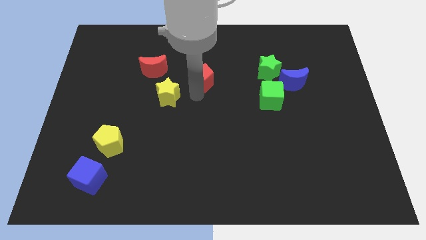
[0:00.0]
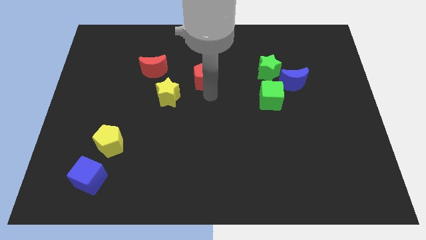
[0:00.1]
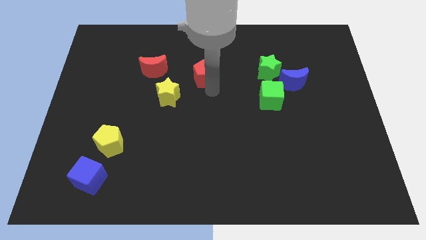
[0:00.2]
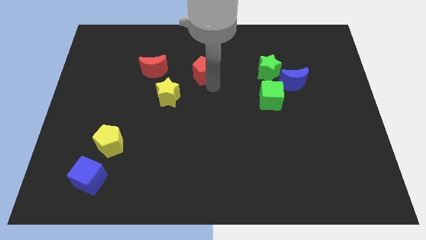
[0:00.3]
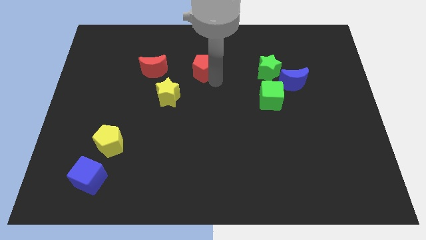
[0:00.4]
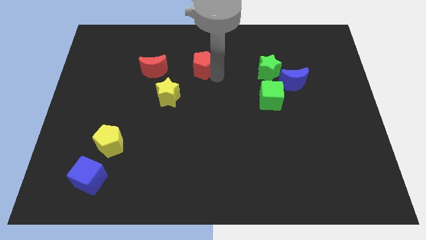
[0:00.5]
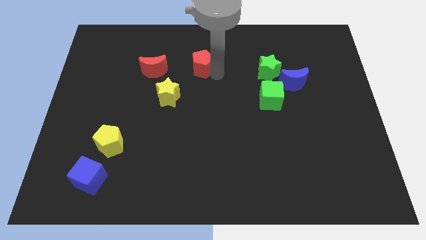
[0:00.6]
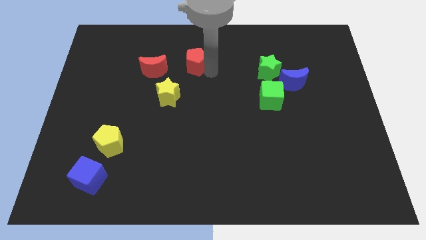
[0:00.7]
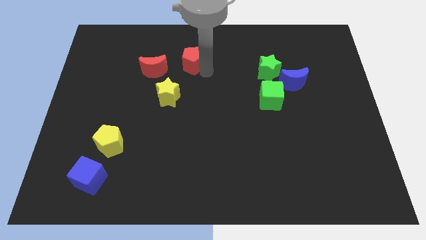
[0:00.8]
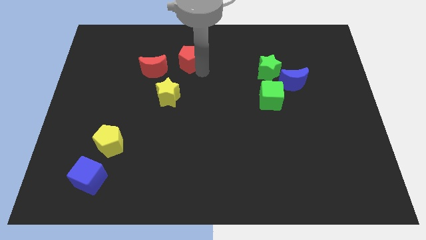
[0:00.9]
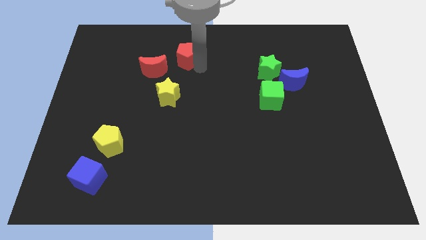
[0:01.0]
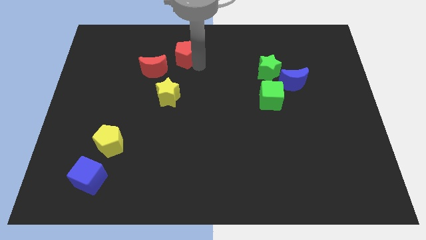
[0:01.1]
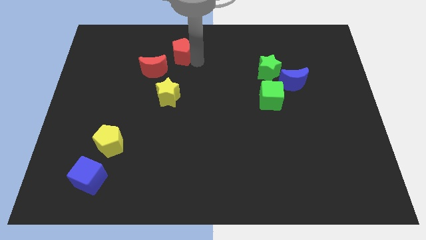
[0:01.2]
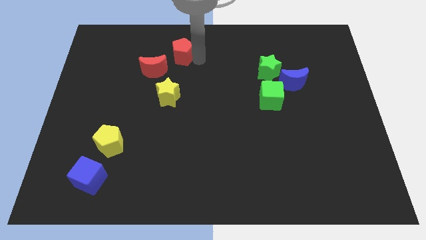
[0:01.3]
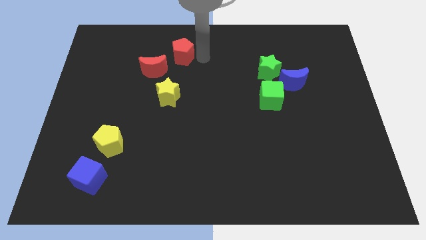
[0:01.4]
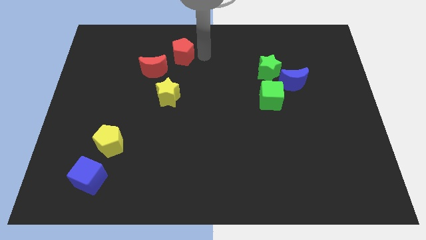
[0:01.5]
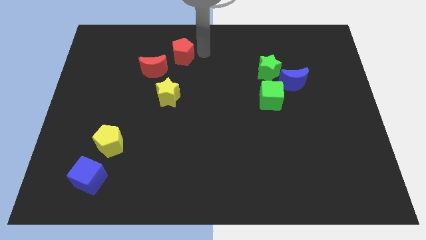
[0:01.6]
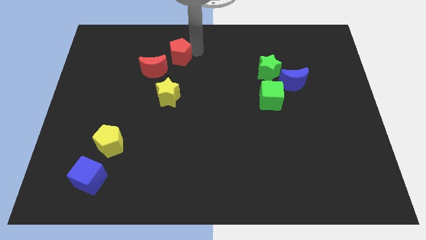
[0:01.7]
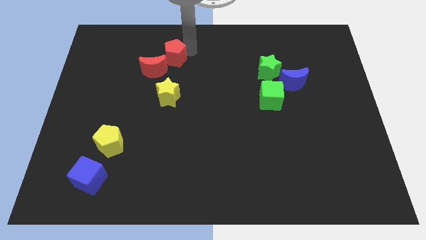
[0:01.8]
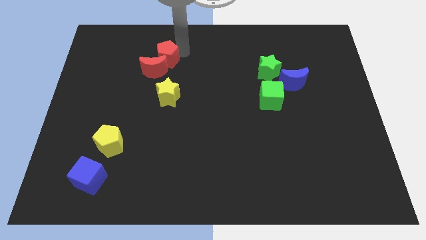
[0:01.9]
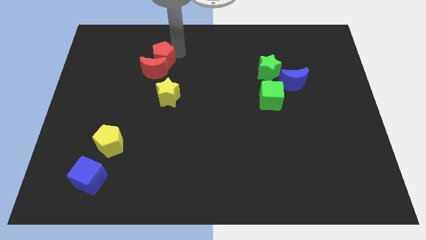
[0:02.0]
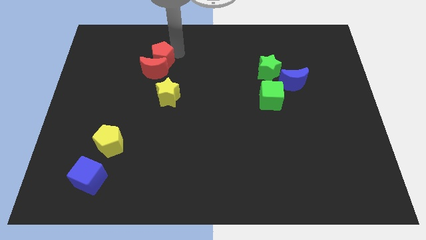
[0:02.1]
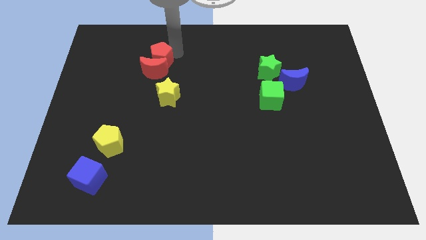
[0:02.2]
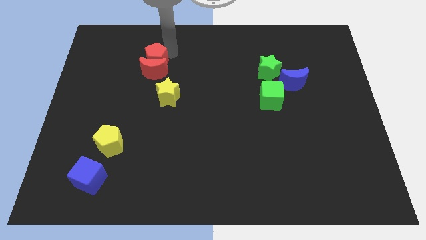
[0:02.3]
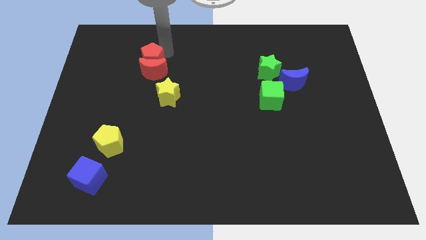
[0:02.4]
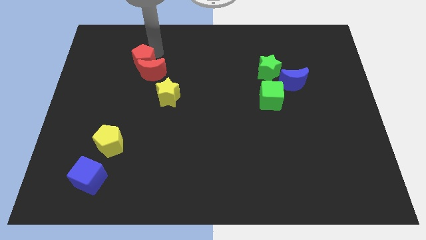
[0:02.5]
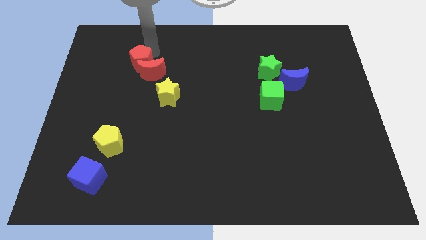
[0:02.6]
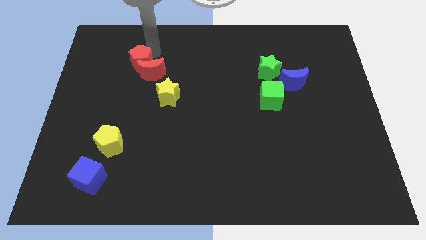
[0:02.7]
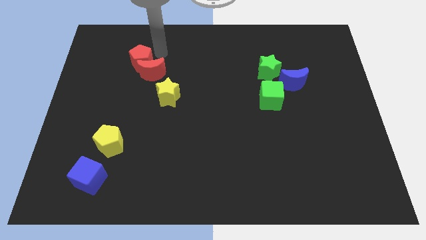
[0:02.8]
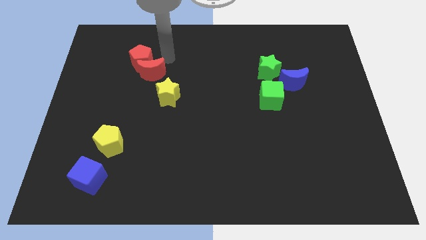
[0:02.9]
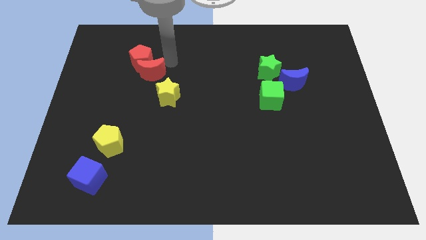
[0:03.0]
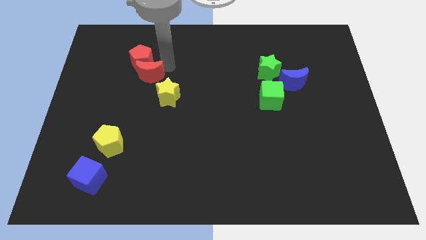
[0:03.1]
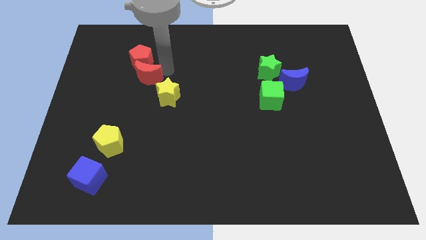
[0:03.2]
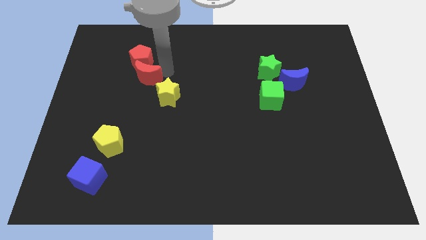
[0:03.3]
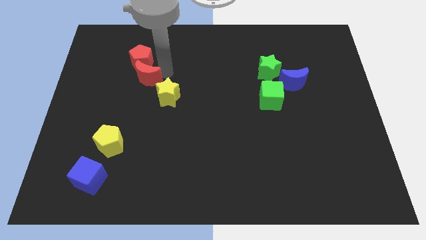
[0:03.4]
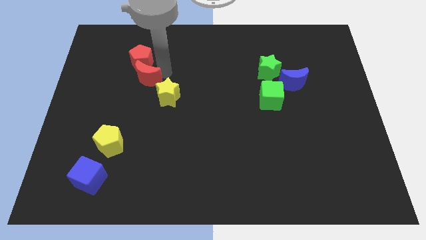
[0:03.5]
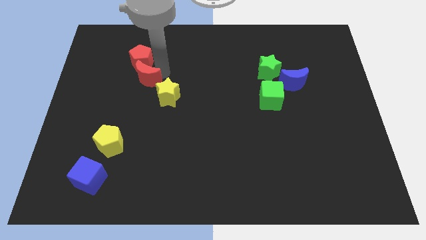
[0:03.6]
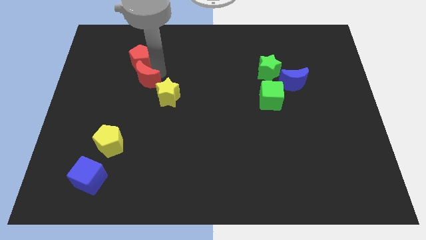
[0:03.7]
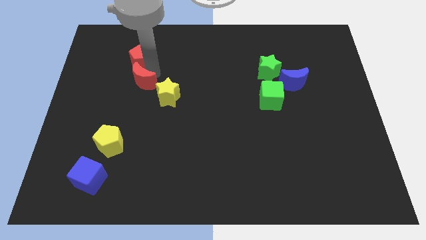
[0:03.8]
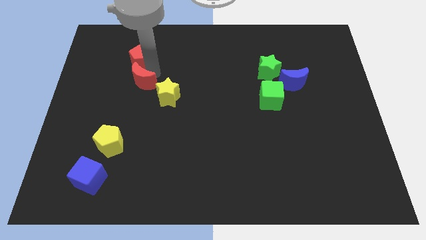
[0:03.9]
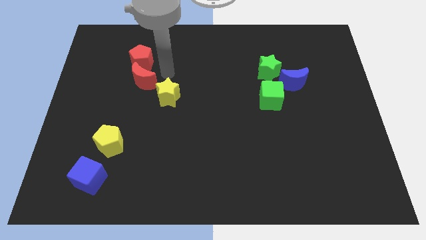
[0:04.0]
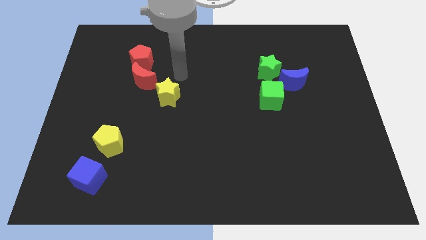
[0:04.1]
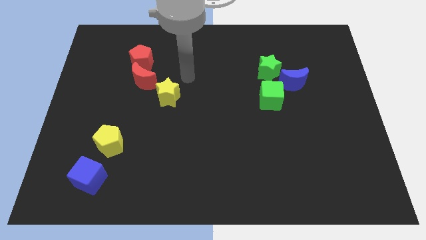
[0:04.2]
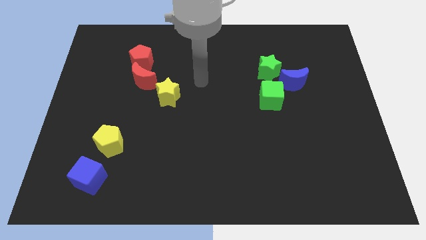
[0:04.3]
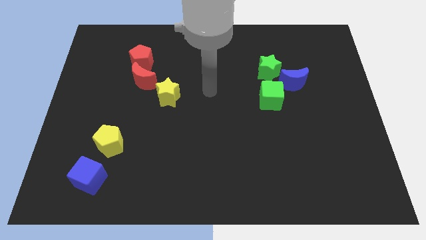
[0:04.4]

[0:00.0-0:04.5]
push the red pentagon into the red moon

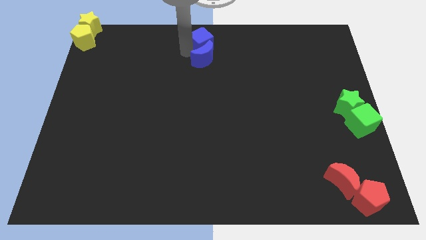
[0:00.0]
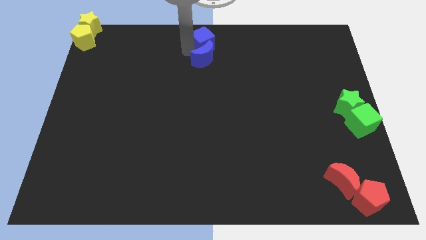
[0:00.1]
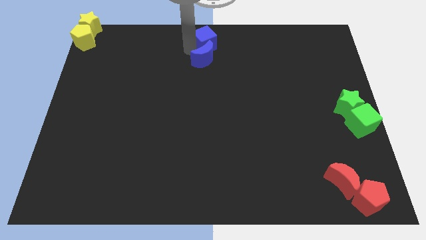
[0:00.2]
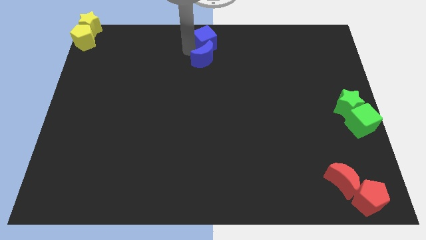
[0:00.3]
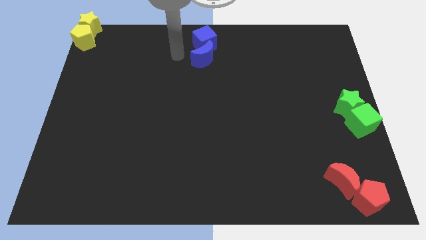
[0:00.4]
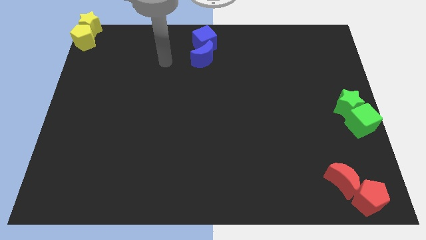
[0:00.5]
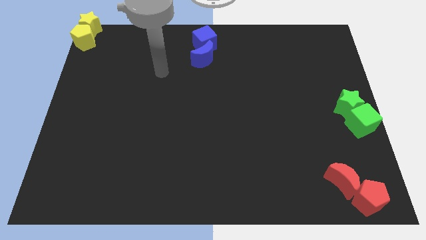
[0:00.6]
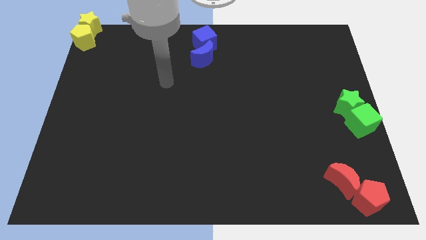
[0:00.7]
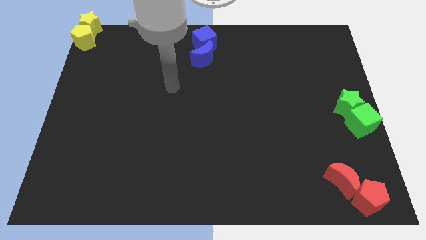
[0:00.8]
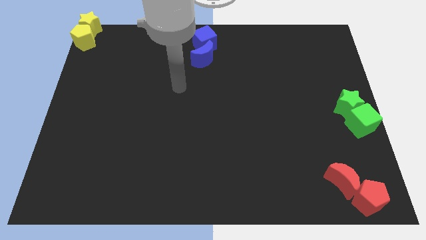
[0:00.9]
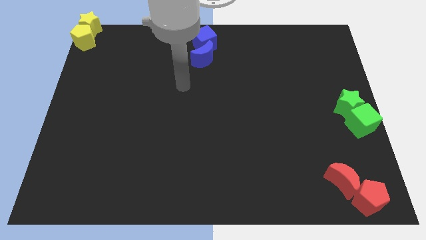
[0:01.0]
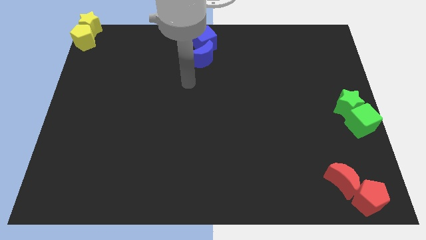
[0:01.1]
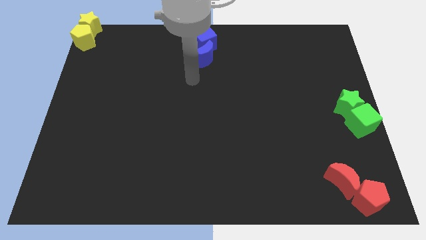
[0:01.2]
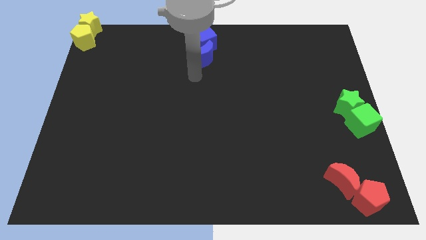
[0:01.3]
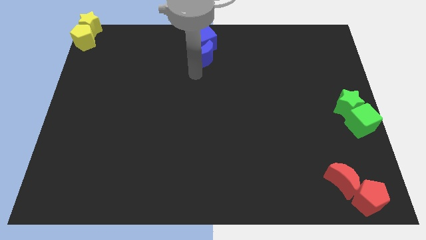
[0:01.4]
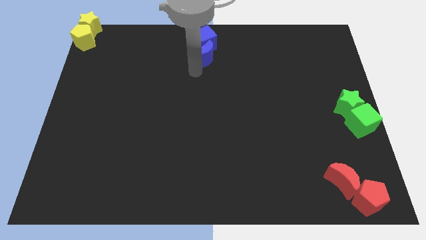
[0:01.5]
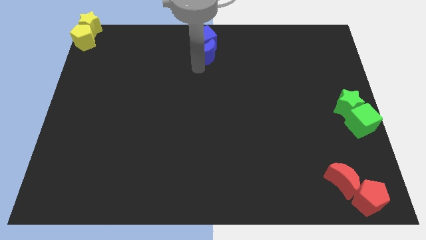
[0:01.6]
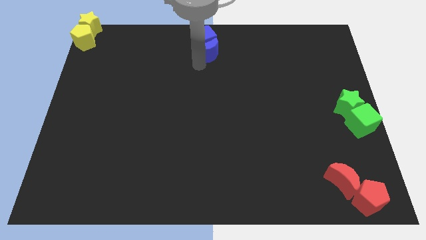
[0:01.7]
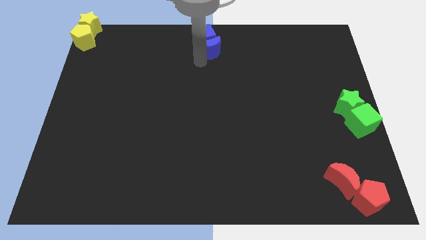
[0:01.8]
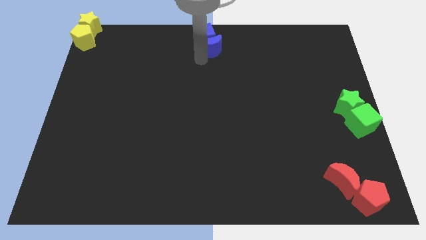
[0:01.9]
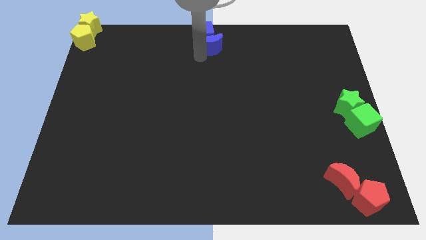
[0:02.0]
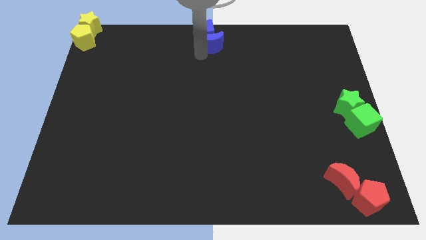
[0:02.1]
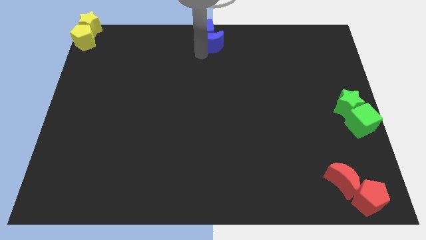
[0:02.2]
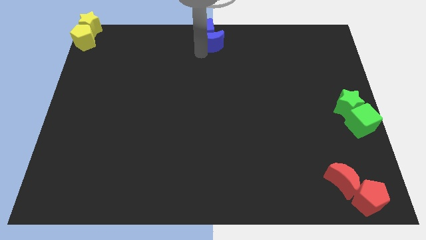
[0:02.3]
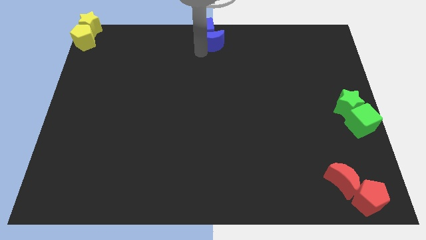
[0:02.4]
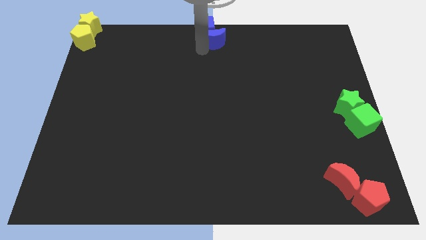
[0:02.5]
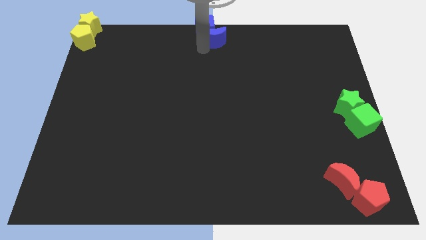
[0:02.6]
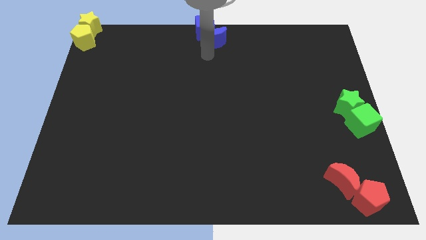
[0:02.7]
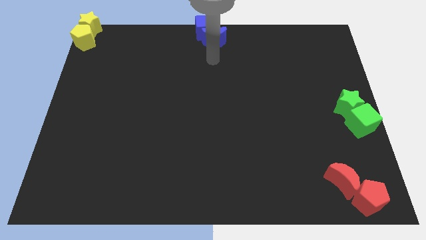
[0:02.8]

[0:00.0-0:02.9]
place blue cube towards top middle end of the board

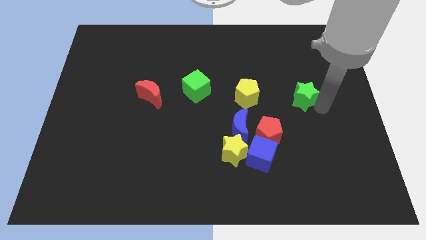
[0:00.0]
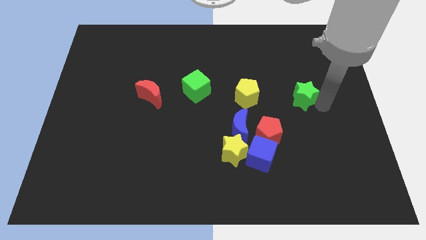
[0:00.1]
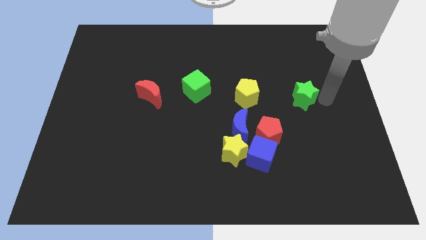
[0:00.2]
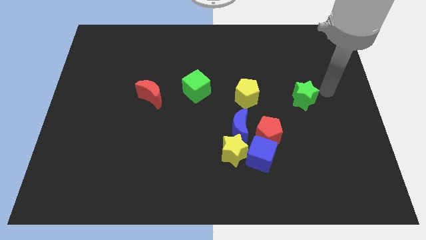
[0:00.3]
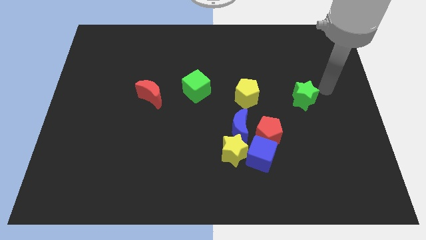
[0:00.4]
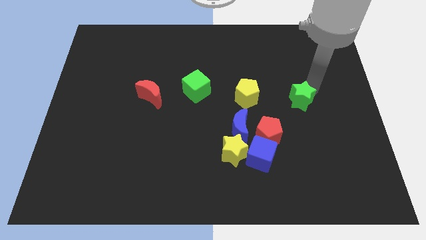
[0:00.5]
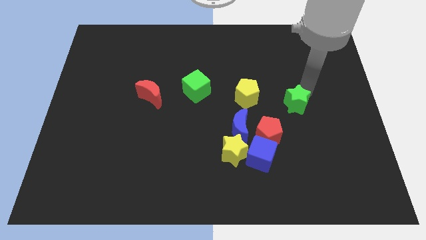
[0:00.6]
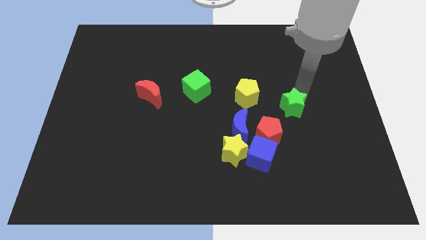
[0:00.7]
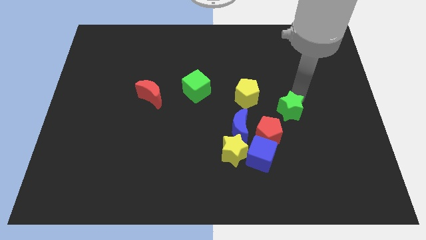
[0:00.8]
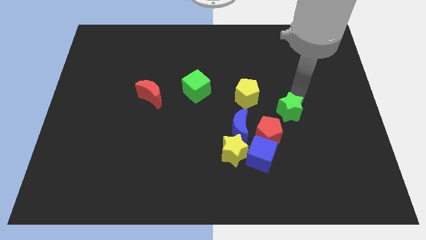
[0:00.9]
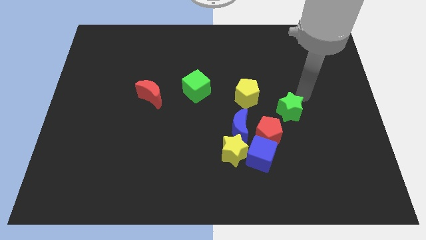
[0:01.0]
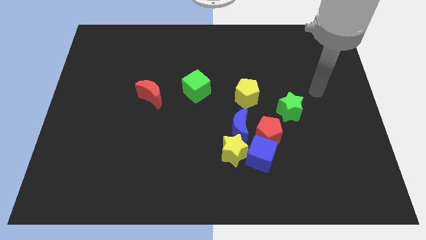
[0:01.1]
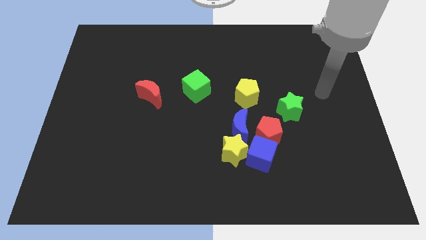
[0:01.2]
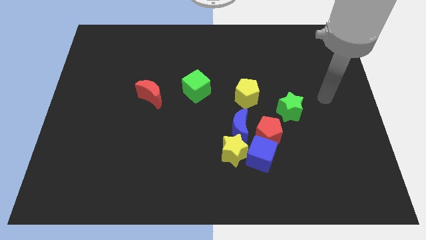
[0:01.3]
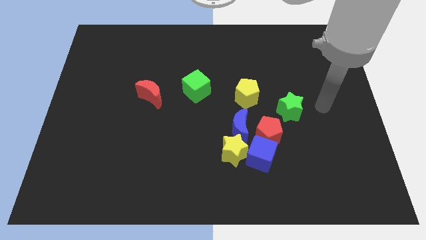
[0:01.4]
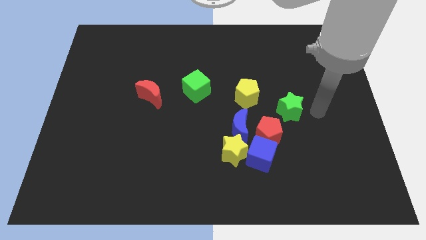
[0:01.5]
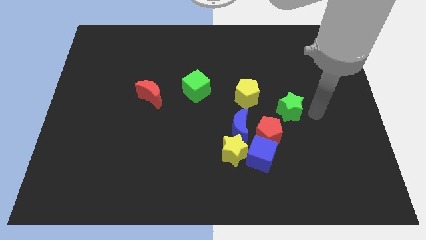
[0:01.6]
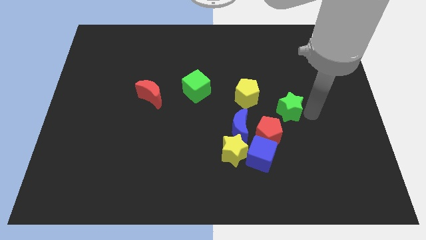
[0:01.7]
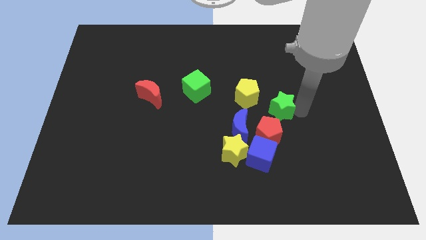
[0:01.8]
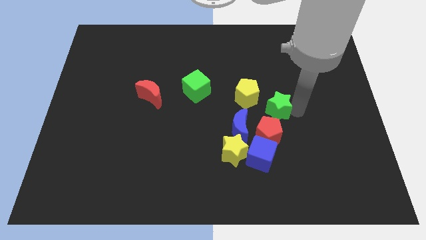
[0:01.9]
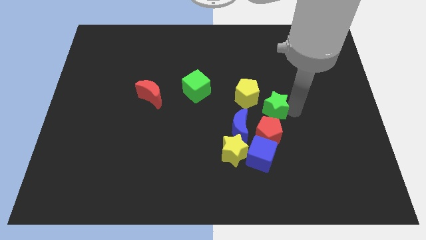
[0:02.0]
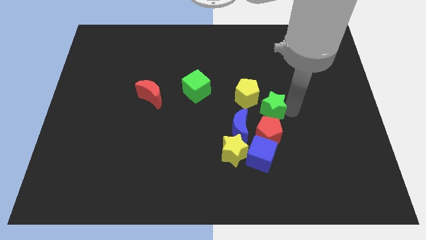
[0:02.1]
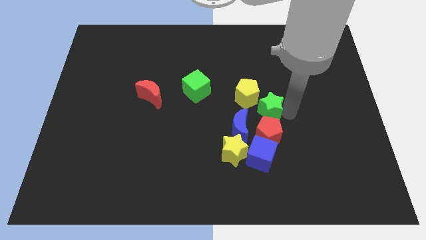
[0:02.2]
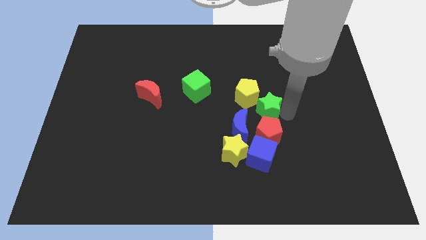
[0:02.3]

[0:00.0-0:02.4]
place green star above red pentagon
